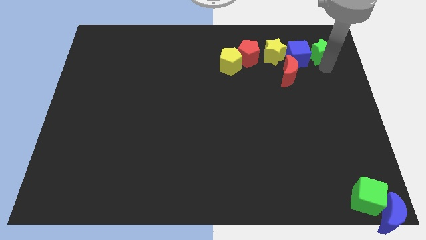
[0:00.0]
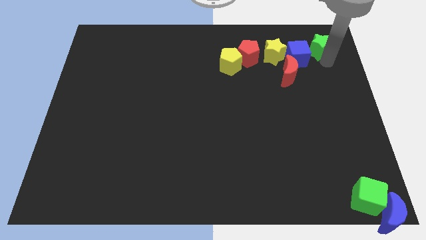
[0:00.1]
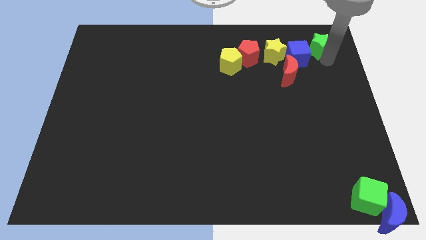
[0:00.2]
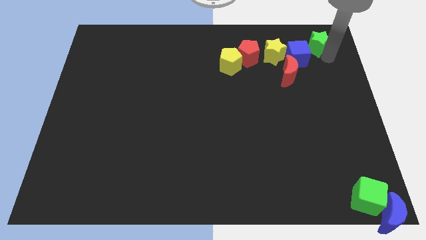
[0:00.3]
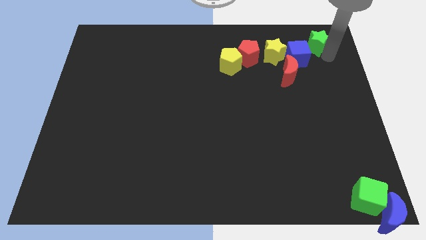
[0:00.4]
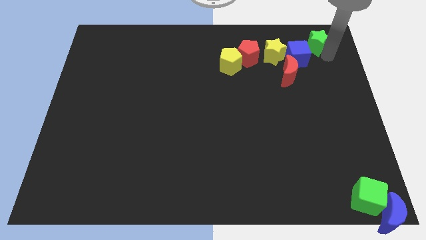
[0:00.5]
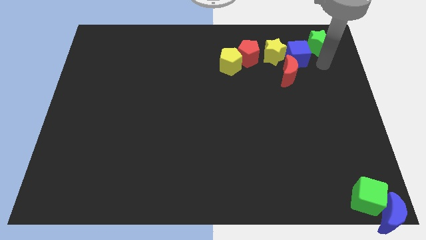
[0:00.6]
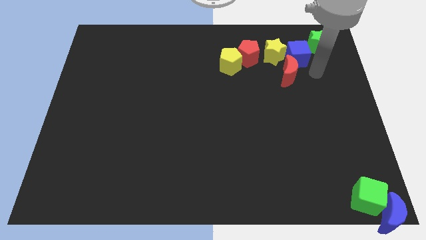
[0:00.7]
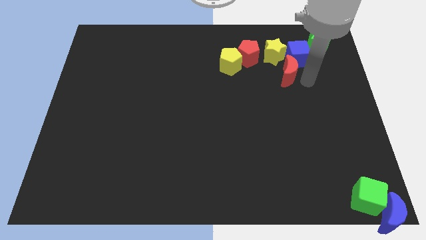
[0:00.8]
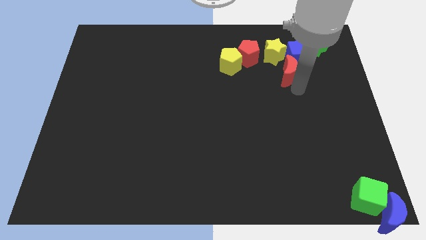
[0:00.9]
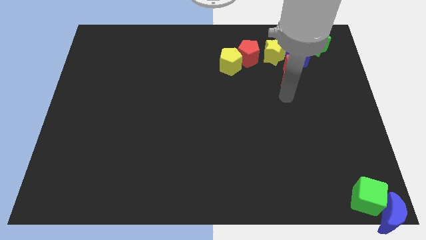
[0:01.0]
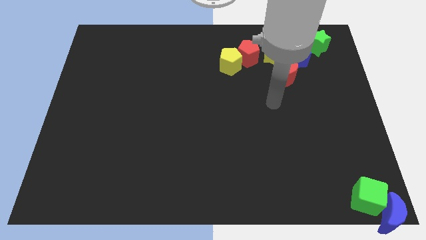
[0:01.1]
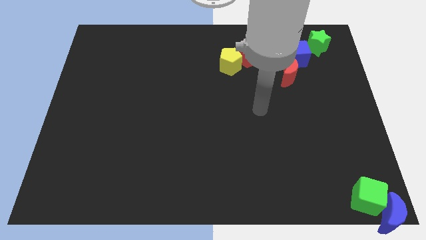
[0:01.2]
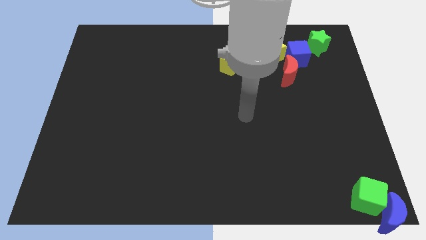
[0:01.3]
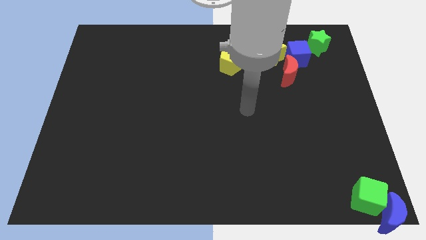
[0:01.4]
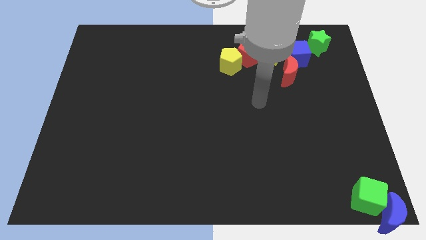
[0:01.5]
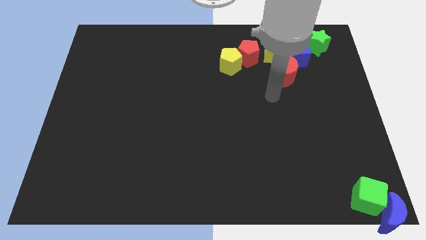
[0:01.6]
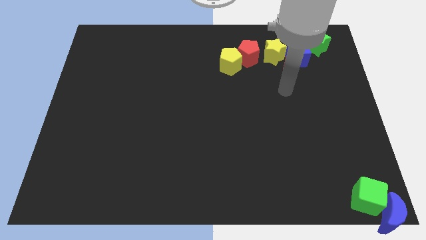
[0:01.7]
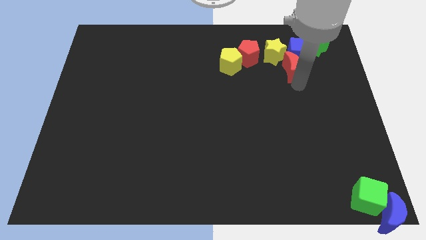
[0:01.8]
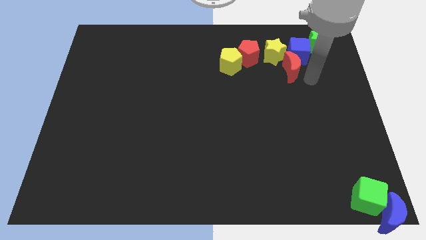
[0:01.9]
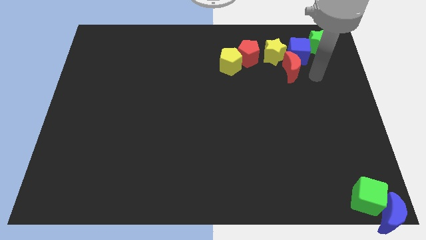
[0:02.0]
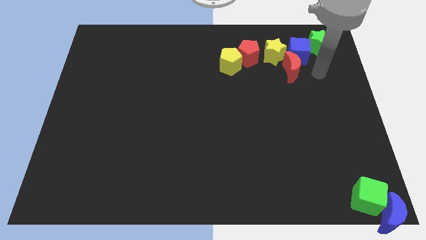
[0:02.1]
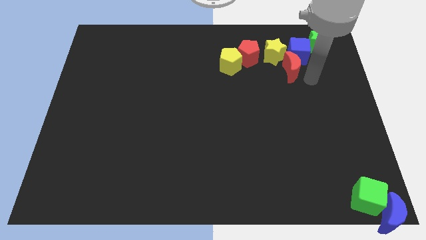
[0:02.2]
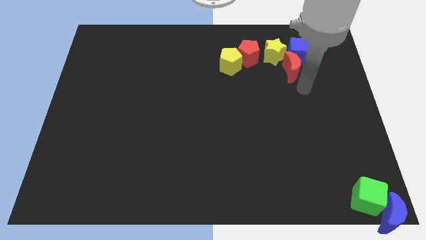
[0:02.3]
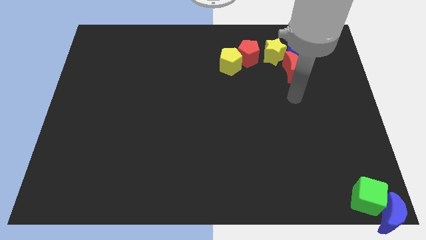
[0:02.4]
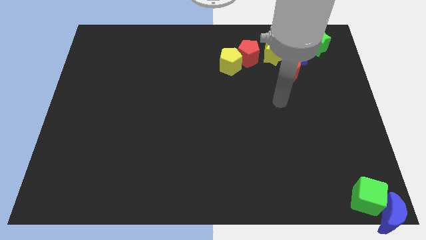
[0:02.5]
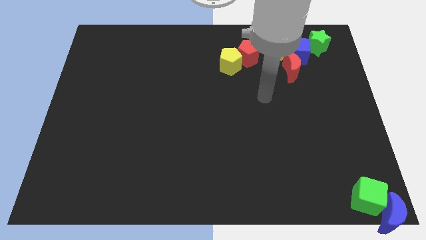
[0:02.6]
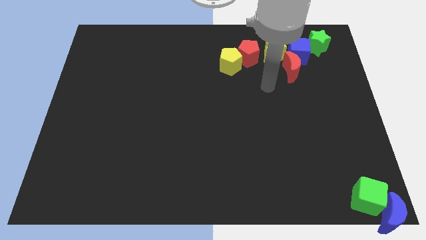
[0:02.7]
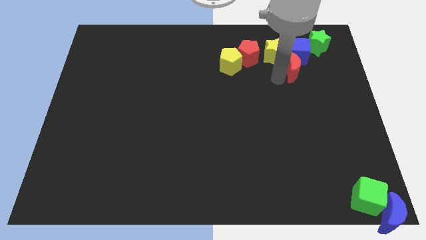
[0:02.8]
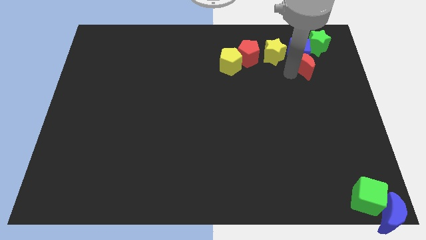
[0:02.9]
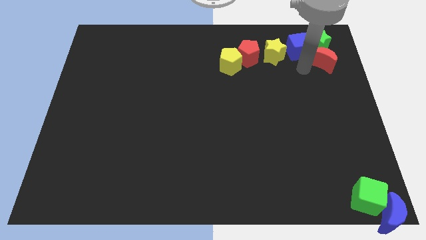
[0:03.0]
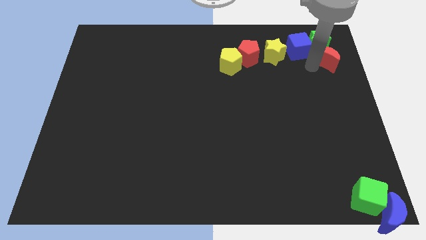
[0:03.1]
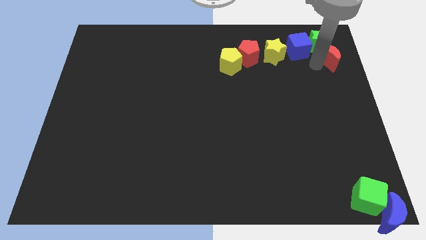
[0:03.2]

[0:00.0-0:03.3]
place the green star and red crescent on the top right

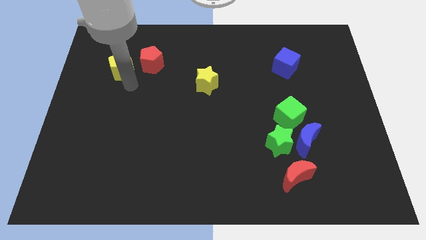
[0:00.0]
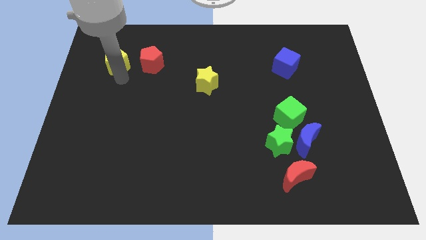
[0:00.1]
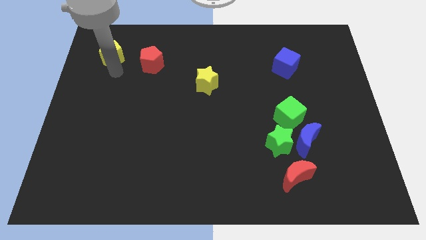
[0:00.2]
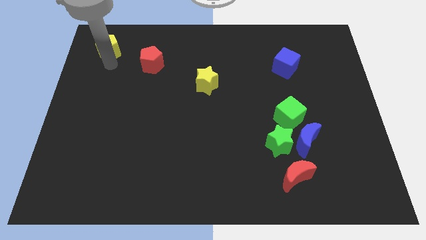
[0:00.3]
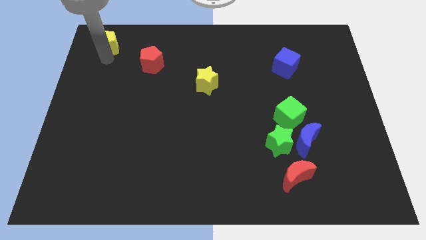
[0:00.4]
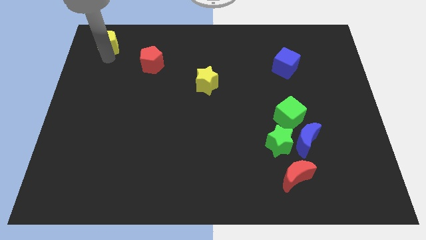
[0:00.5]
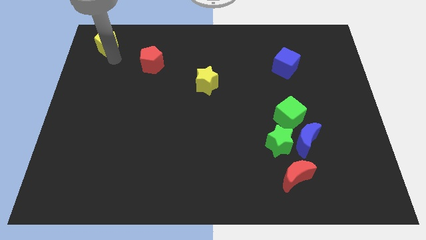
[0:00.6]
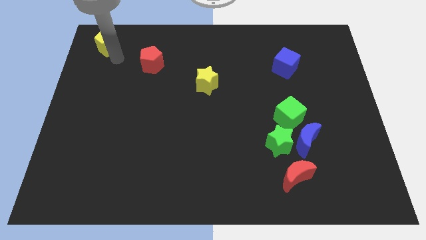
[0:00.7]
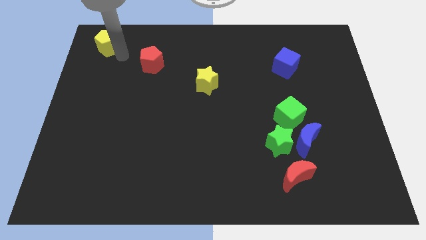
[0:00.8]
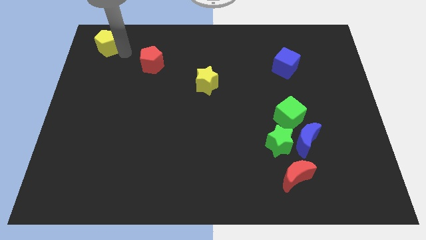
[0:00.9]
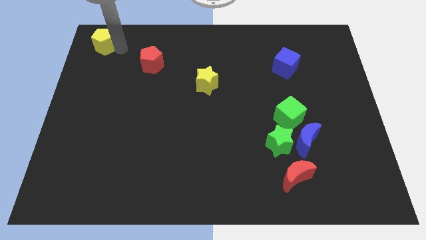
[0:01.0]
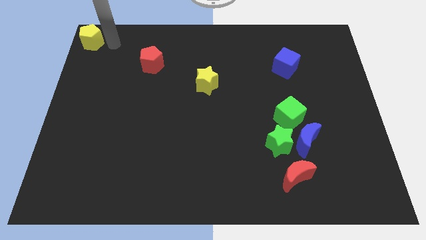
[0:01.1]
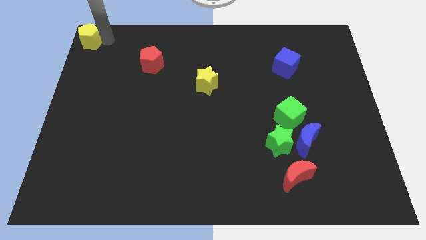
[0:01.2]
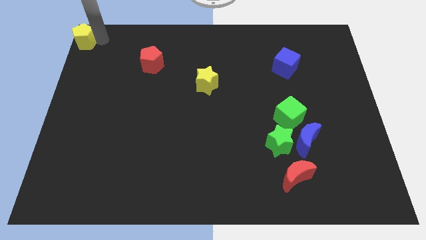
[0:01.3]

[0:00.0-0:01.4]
place the yellow pentagon at the top left corner

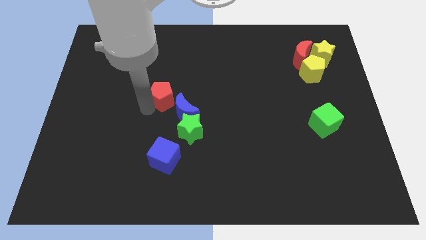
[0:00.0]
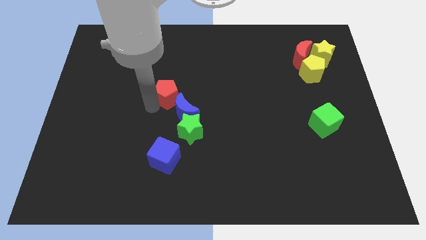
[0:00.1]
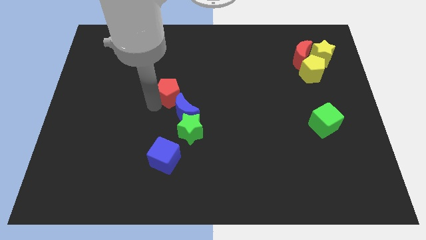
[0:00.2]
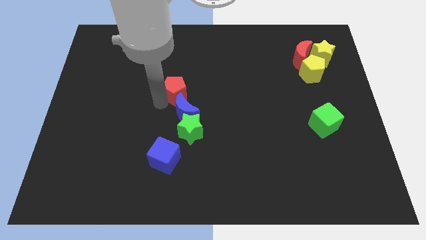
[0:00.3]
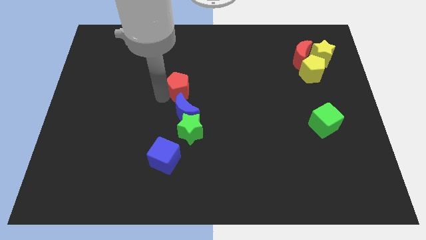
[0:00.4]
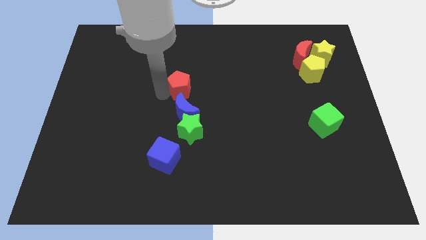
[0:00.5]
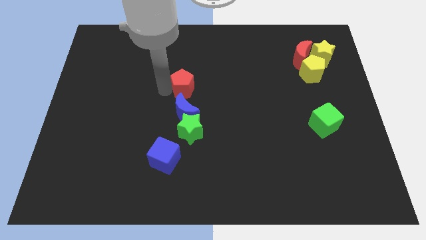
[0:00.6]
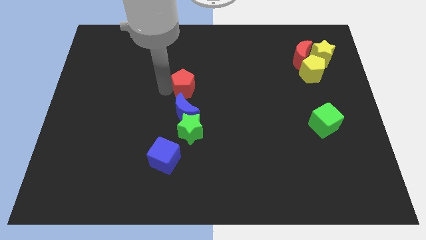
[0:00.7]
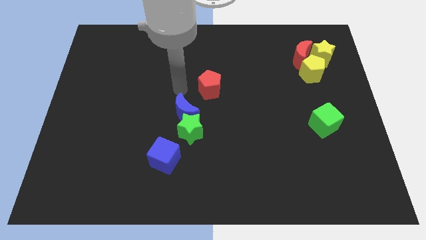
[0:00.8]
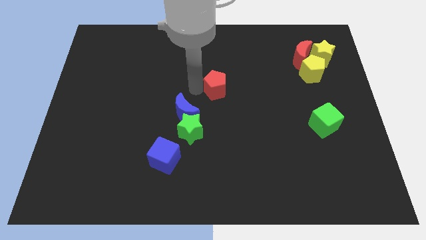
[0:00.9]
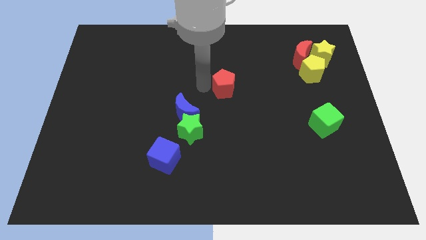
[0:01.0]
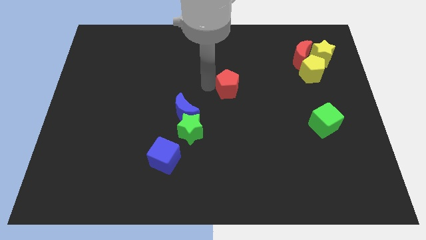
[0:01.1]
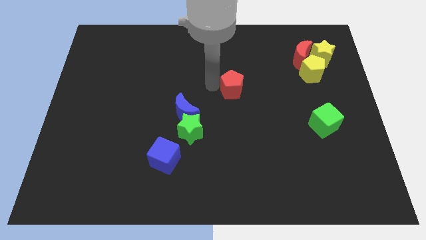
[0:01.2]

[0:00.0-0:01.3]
place the red pentagon diagonal to the blue moon

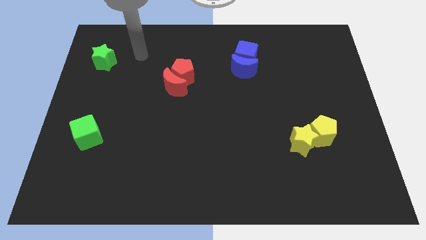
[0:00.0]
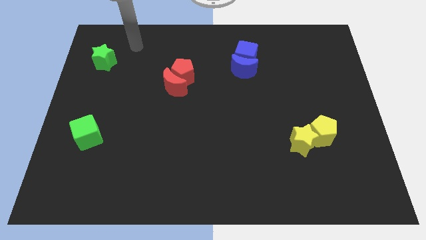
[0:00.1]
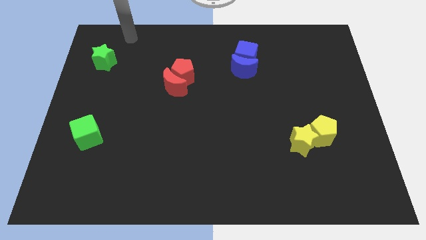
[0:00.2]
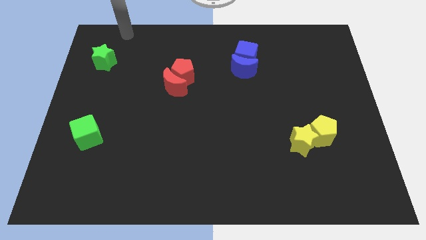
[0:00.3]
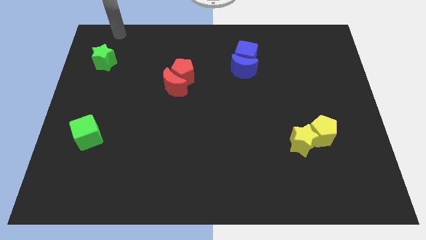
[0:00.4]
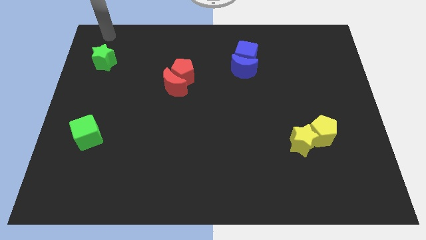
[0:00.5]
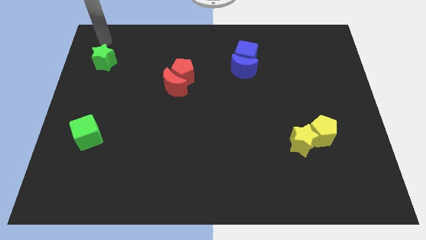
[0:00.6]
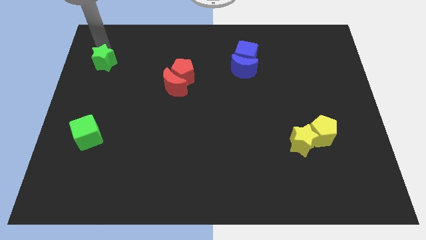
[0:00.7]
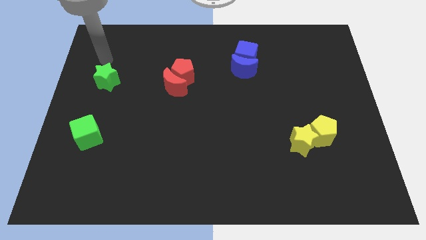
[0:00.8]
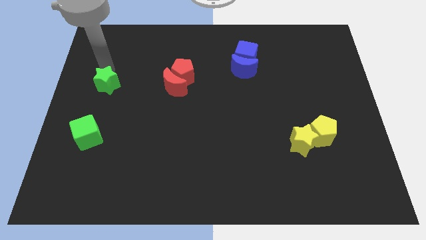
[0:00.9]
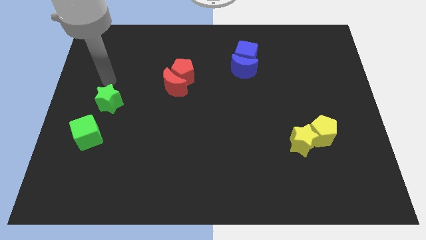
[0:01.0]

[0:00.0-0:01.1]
push the green star slightly downwards

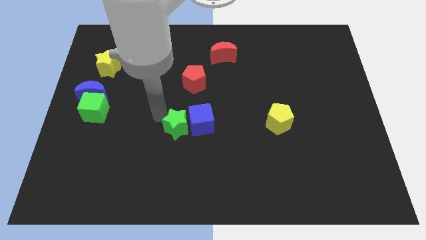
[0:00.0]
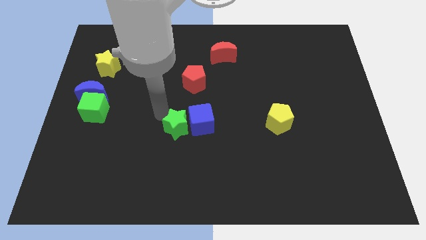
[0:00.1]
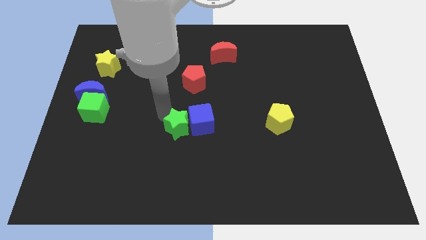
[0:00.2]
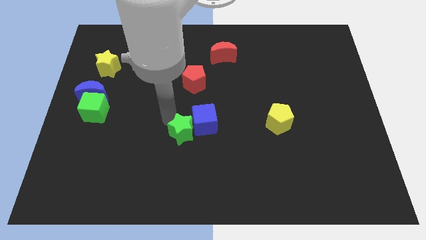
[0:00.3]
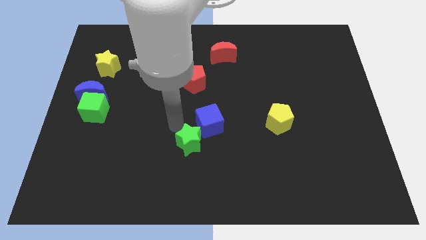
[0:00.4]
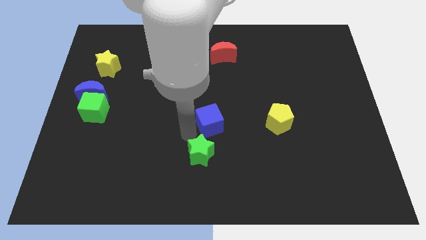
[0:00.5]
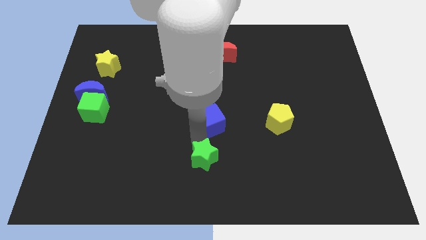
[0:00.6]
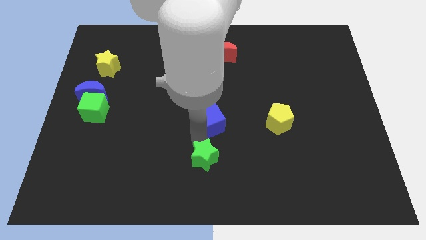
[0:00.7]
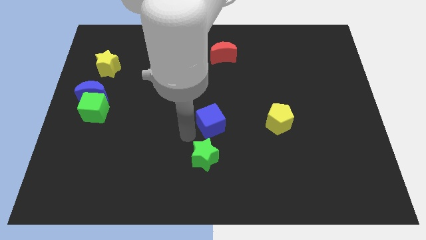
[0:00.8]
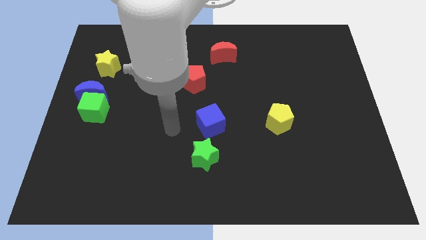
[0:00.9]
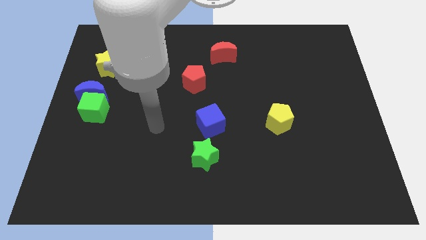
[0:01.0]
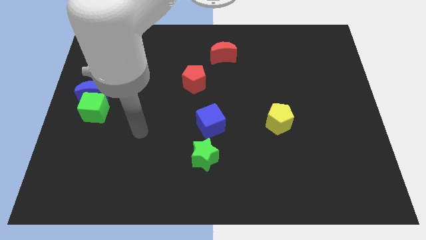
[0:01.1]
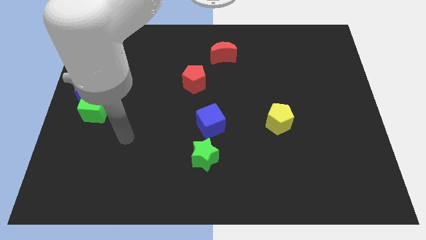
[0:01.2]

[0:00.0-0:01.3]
push the green star to the bottom side of the blue cube

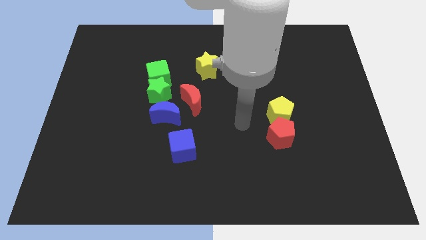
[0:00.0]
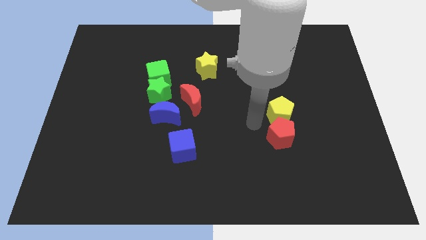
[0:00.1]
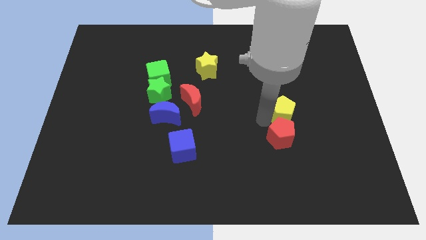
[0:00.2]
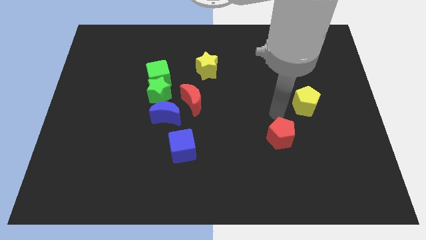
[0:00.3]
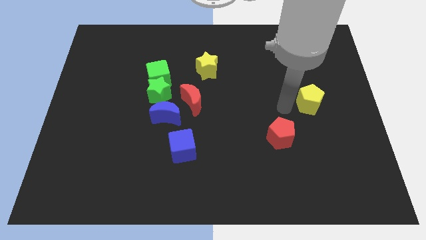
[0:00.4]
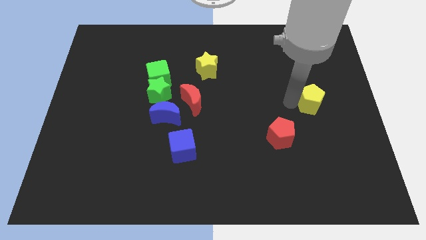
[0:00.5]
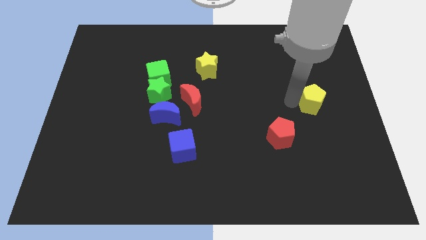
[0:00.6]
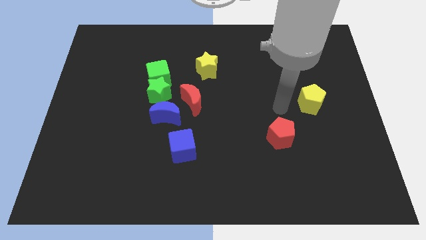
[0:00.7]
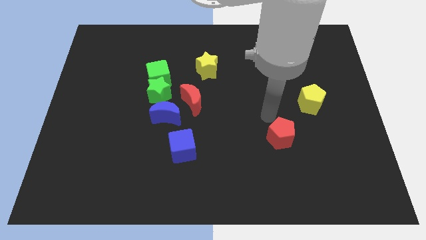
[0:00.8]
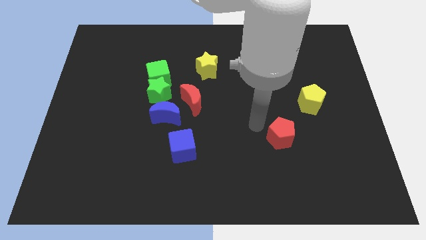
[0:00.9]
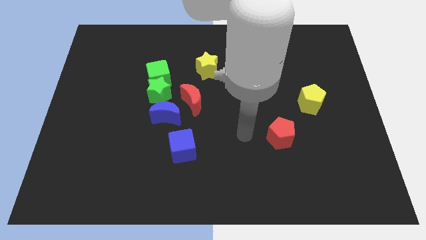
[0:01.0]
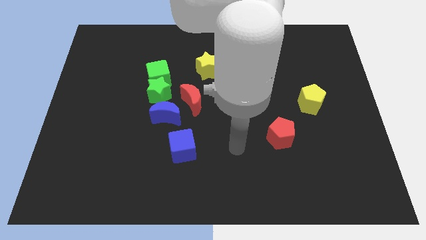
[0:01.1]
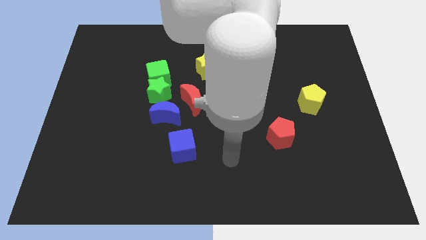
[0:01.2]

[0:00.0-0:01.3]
push the yellow pentagon to the center right
